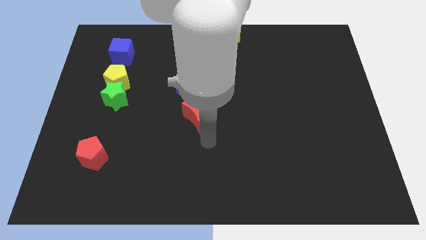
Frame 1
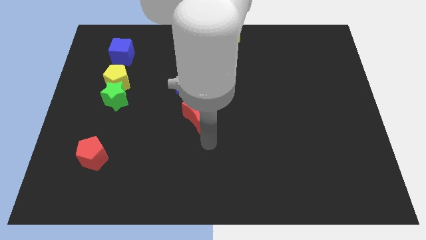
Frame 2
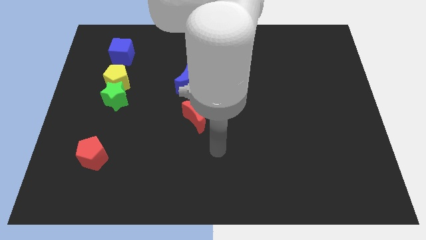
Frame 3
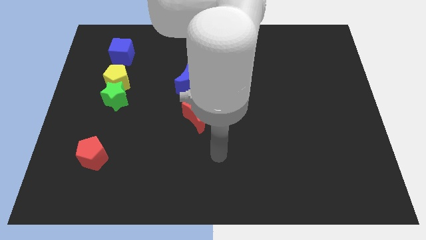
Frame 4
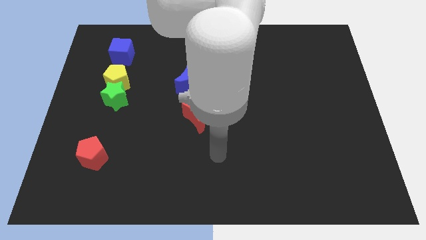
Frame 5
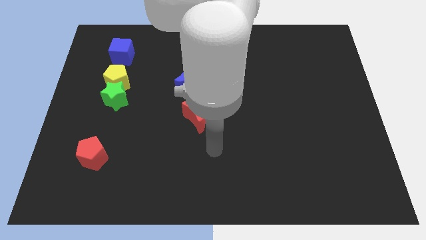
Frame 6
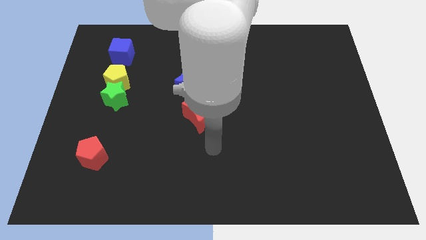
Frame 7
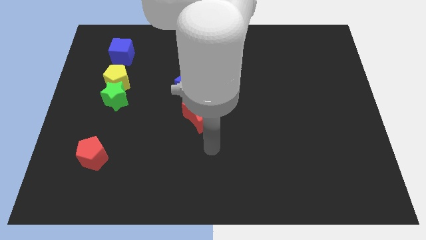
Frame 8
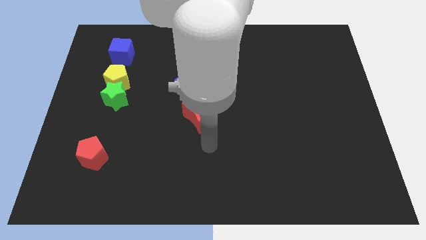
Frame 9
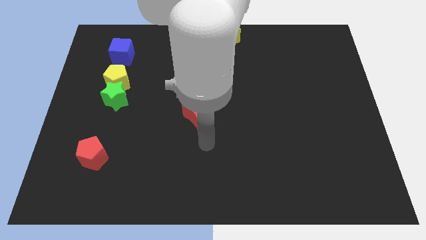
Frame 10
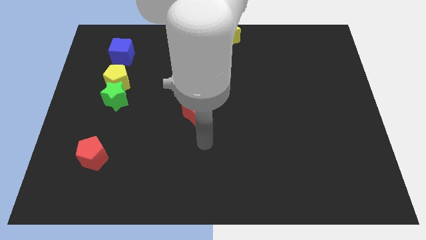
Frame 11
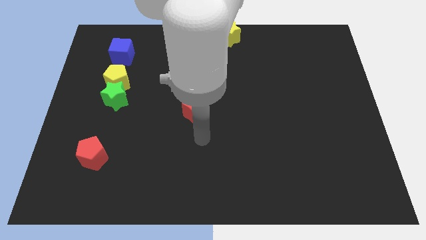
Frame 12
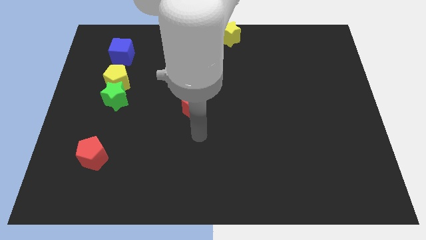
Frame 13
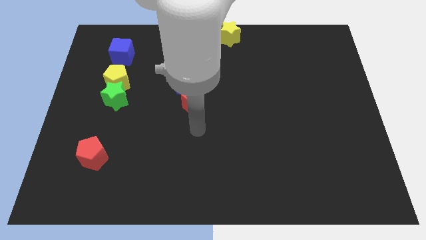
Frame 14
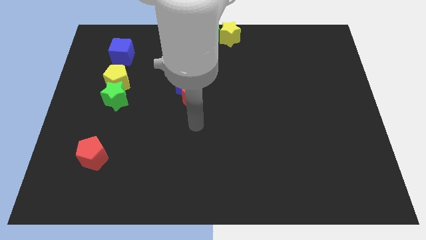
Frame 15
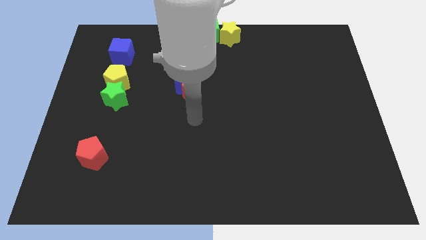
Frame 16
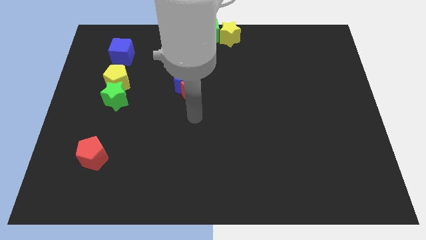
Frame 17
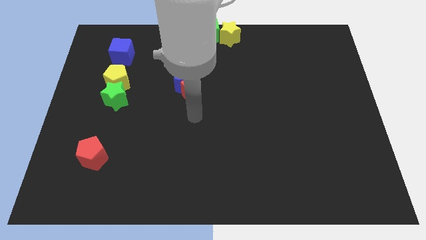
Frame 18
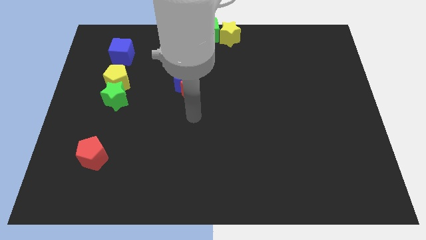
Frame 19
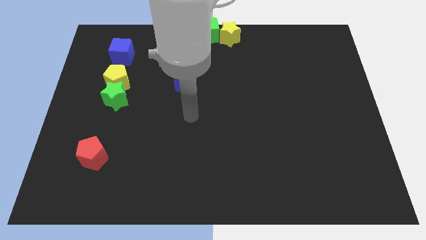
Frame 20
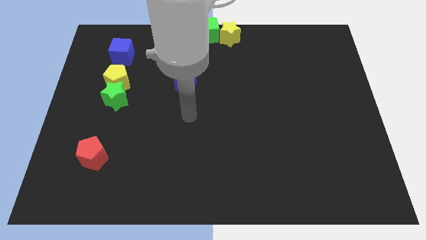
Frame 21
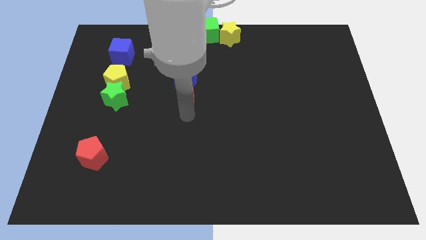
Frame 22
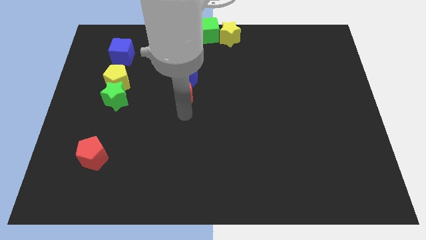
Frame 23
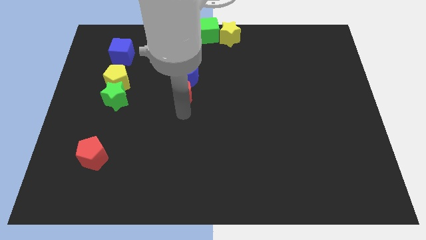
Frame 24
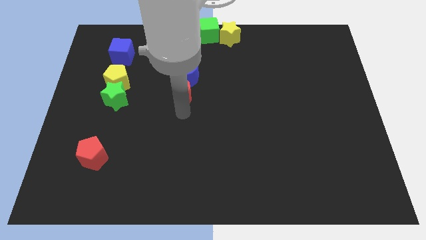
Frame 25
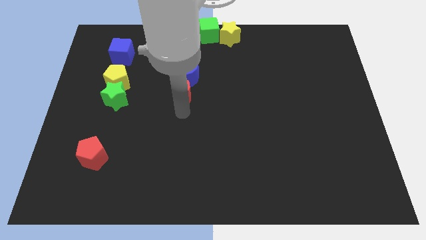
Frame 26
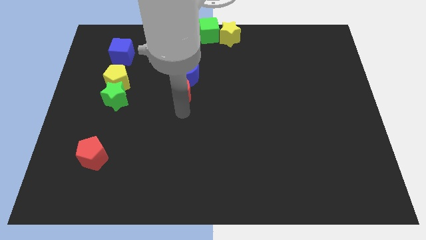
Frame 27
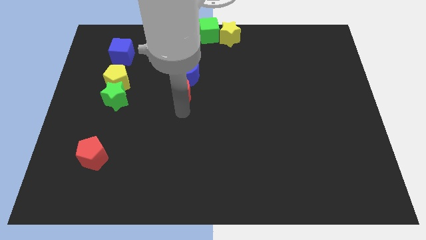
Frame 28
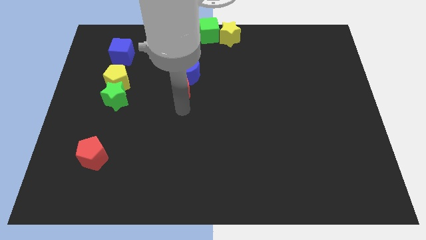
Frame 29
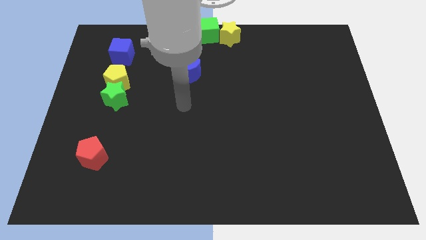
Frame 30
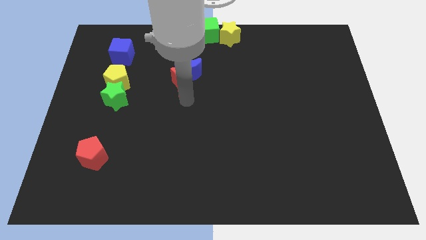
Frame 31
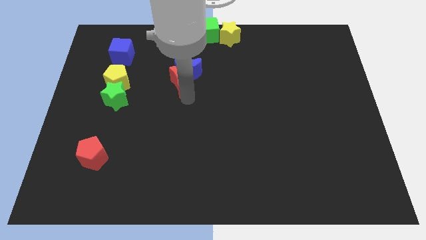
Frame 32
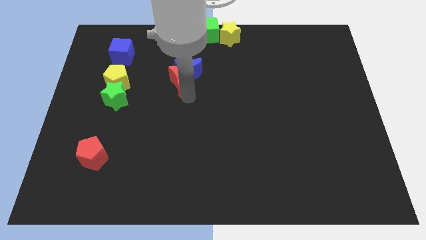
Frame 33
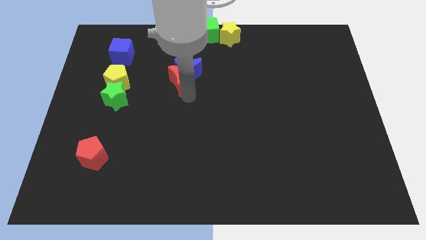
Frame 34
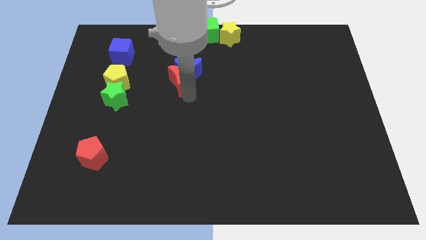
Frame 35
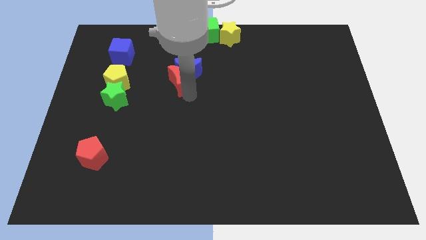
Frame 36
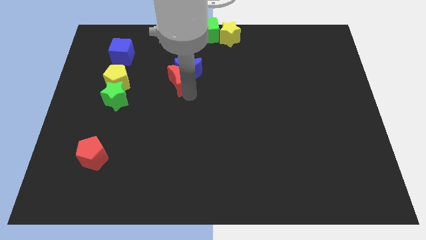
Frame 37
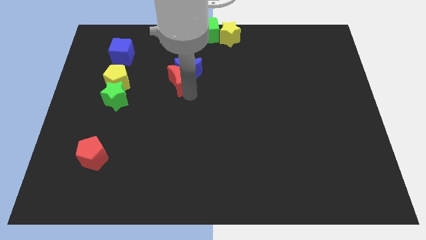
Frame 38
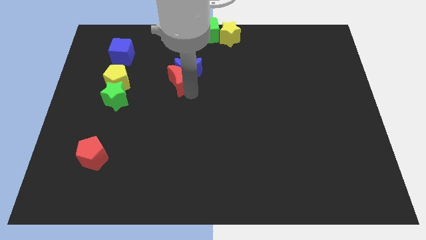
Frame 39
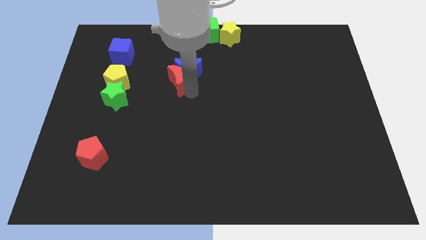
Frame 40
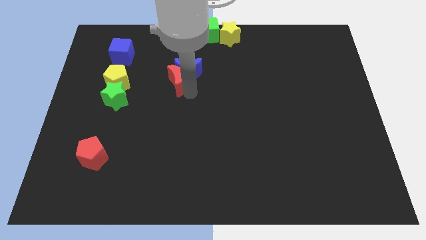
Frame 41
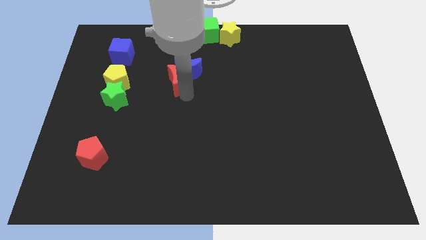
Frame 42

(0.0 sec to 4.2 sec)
slide red moon and blue moon to the top side

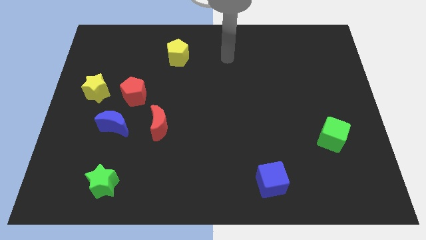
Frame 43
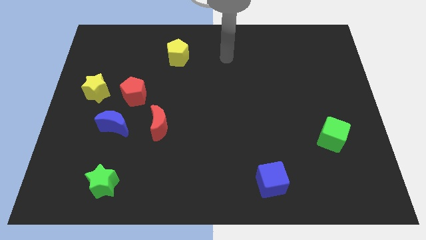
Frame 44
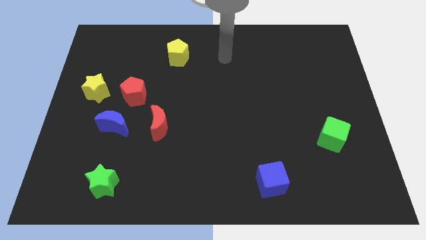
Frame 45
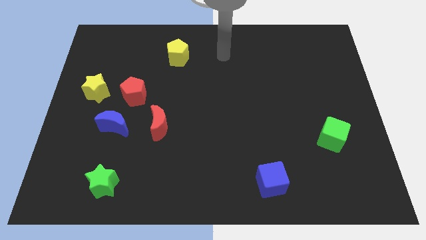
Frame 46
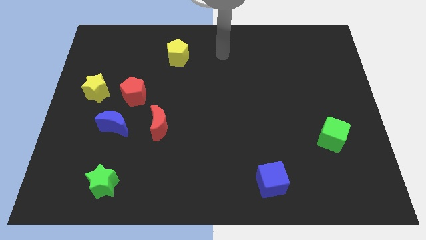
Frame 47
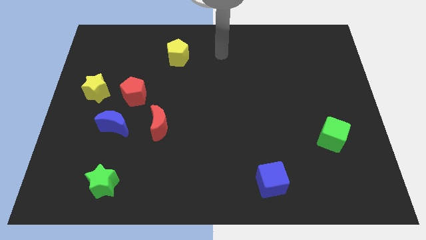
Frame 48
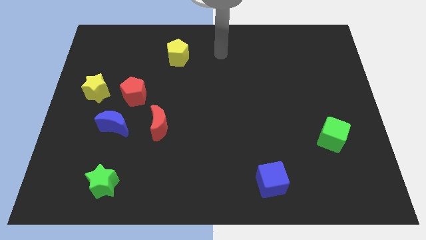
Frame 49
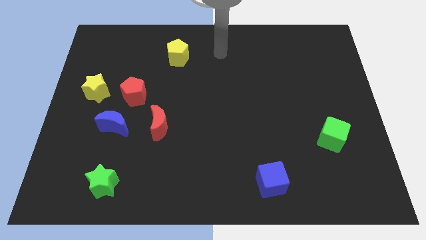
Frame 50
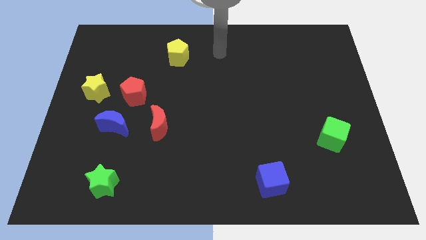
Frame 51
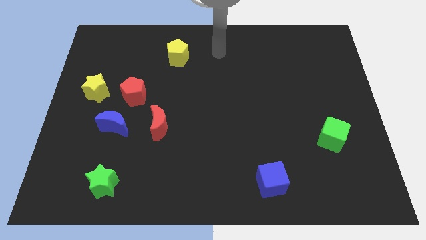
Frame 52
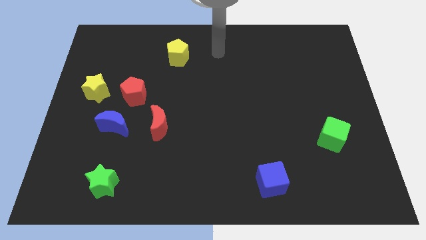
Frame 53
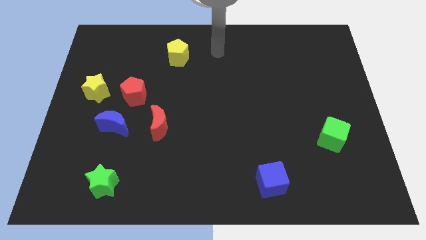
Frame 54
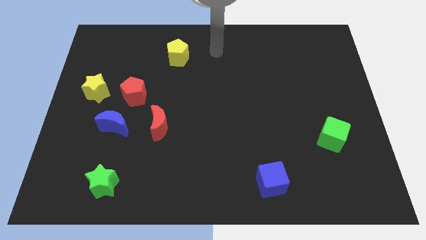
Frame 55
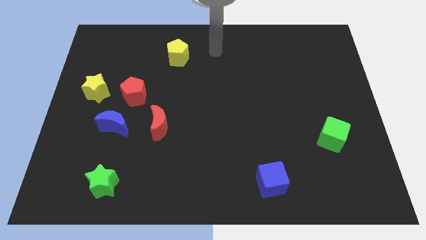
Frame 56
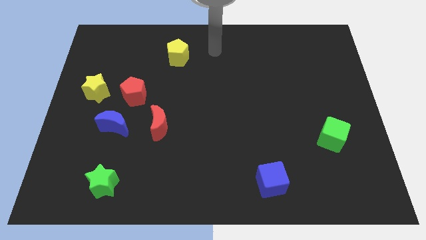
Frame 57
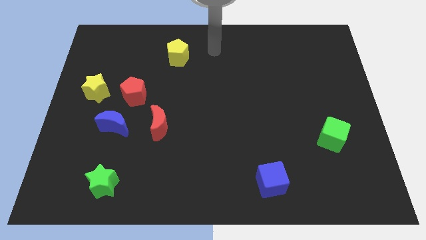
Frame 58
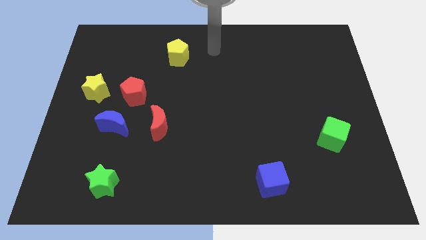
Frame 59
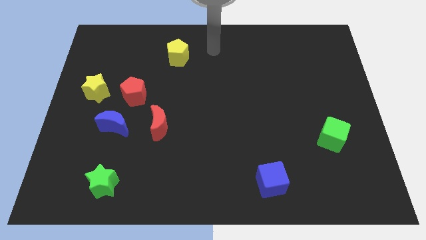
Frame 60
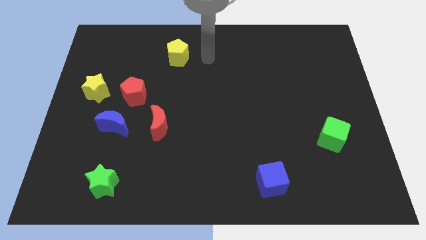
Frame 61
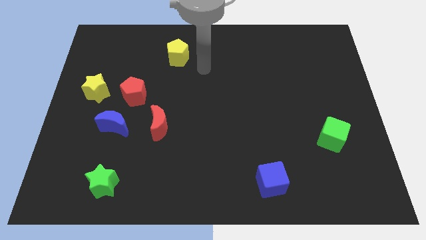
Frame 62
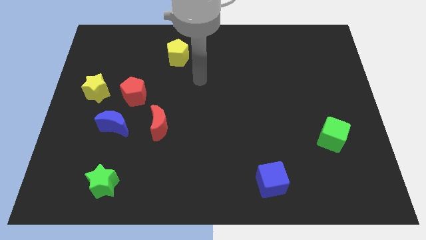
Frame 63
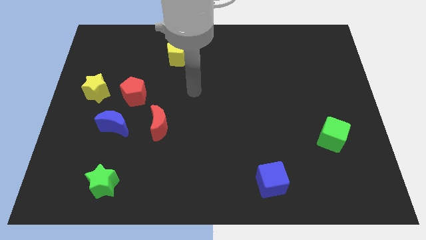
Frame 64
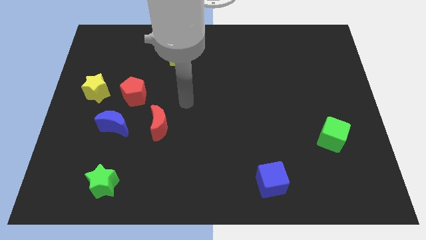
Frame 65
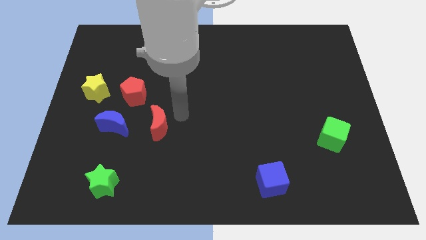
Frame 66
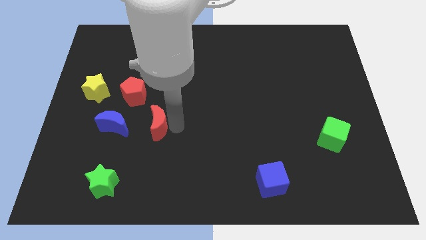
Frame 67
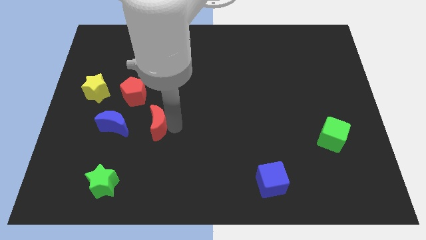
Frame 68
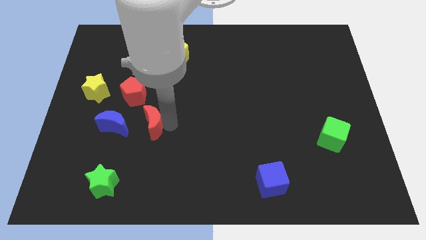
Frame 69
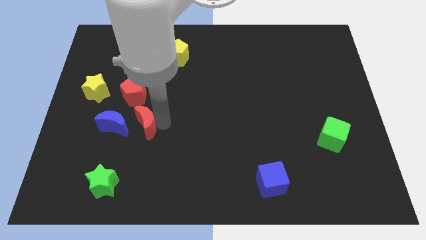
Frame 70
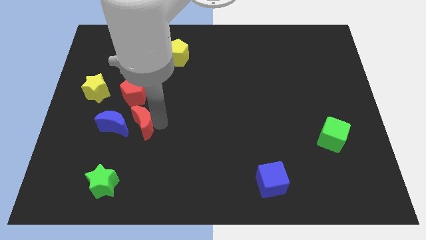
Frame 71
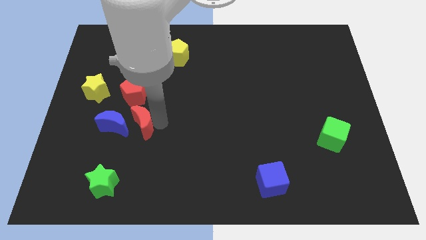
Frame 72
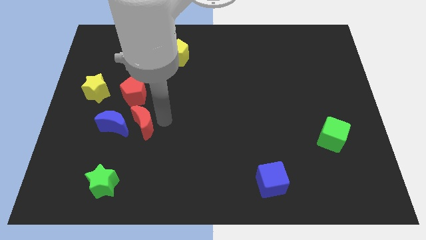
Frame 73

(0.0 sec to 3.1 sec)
move the red crescent towards blue crescent

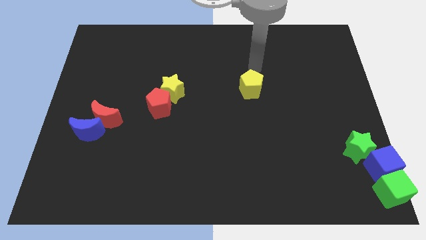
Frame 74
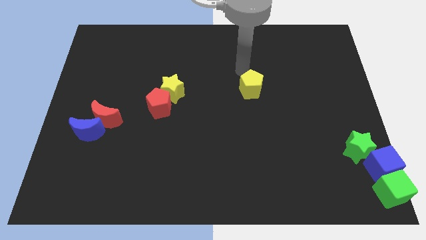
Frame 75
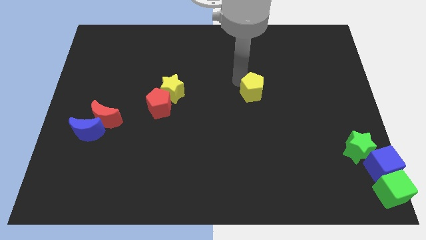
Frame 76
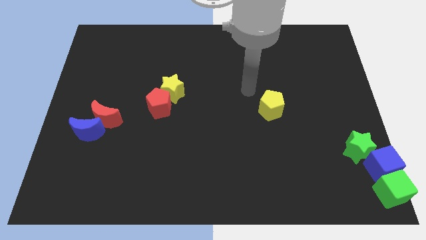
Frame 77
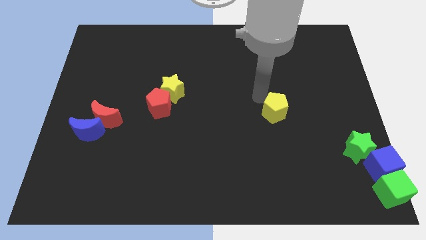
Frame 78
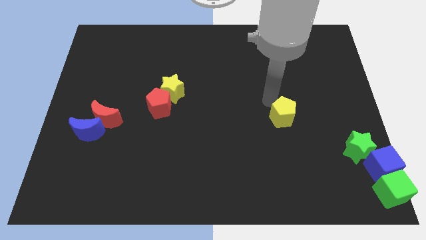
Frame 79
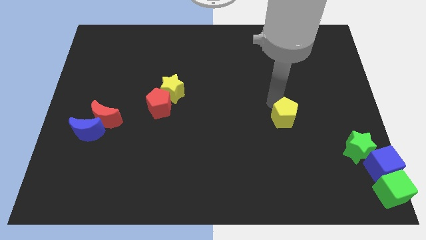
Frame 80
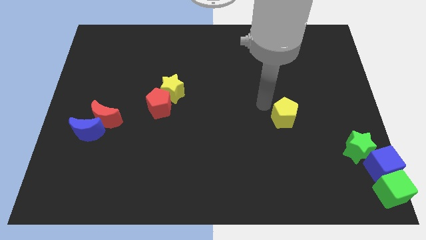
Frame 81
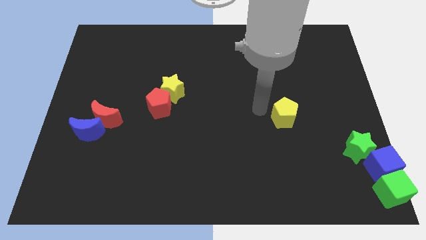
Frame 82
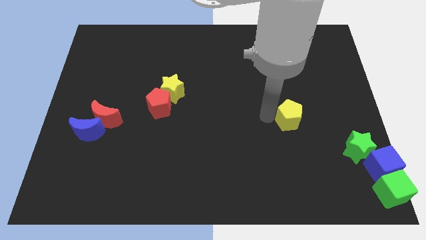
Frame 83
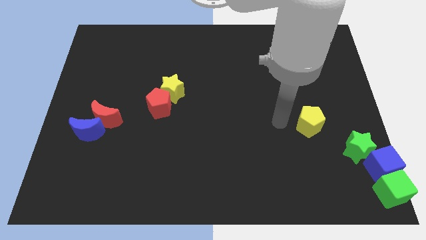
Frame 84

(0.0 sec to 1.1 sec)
push the yellow pentagon diagonally towards the green star

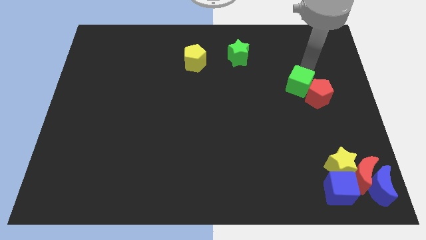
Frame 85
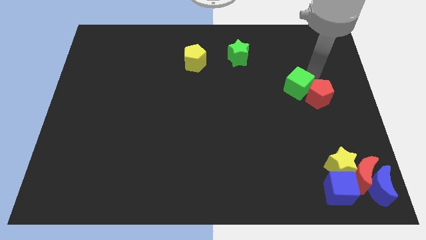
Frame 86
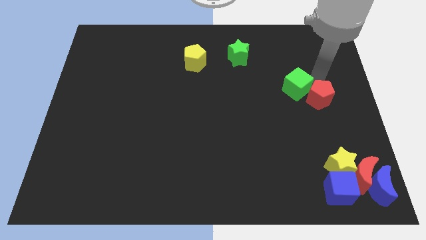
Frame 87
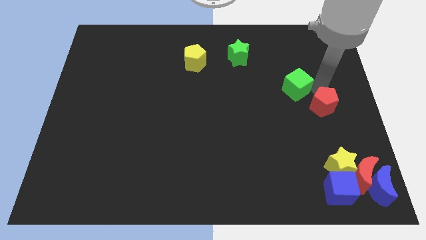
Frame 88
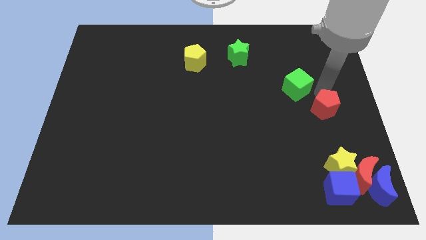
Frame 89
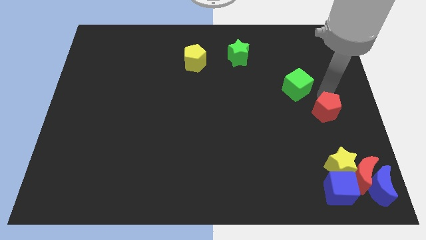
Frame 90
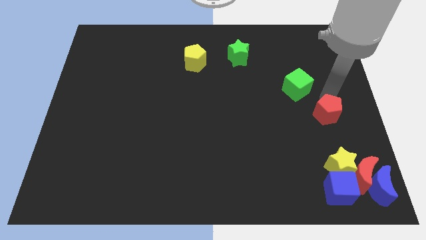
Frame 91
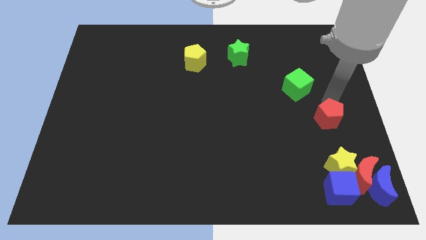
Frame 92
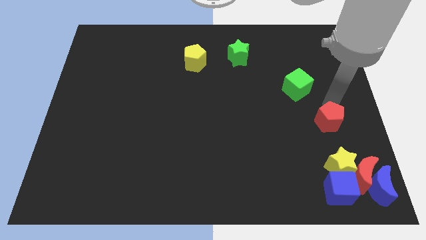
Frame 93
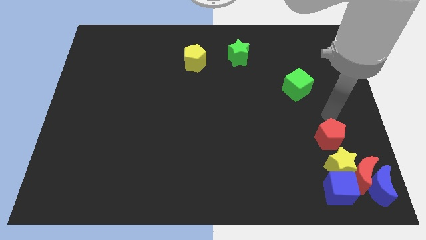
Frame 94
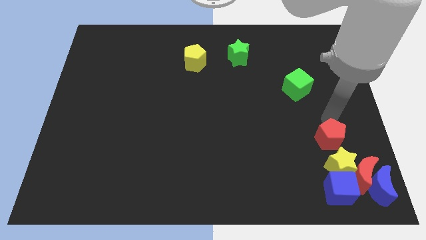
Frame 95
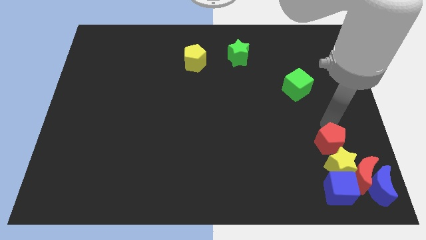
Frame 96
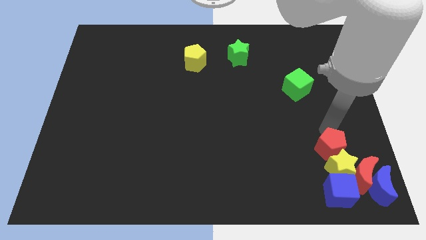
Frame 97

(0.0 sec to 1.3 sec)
separate red pentagon from the green cube
